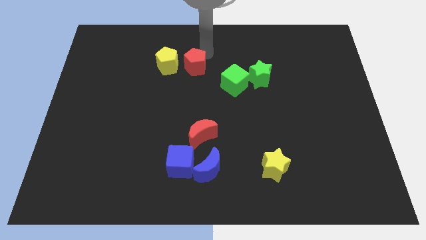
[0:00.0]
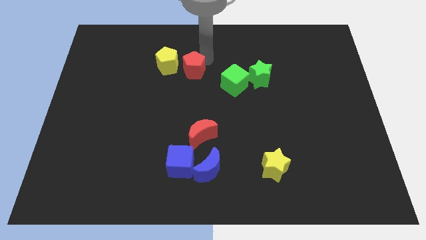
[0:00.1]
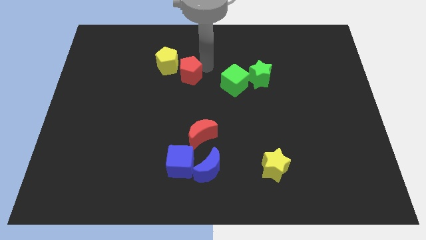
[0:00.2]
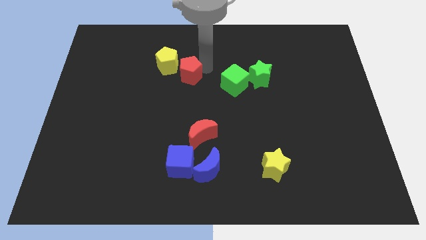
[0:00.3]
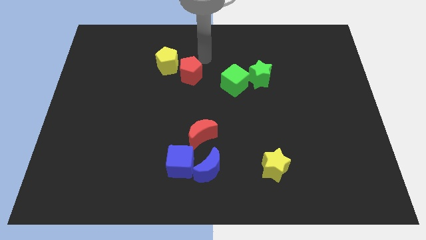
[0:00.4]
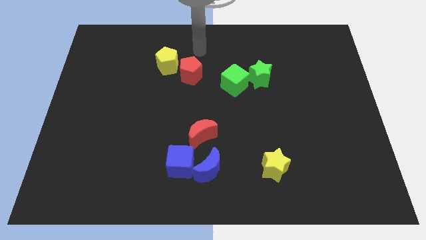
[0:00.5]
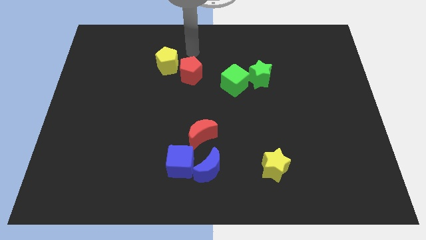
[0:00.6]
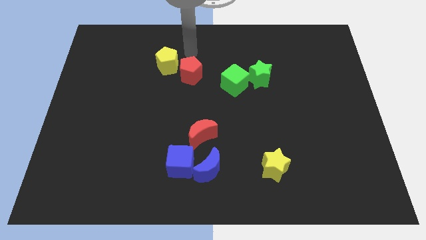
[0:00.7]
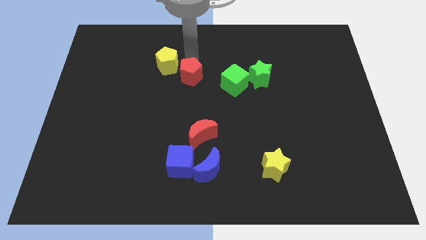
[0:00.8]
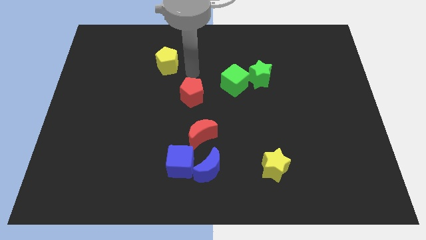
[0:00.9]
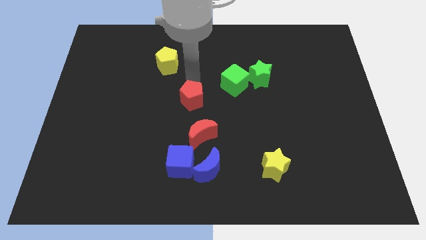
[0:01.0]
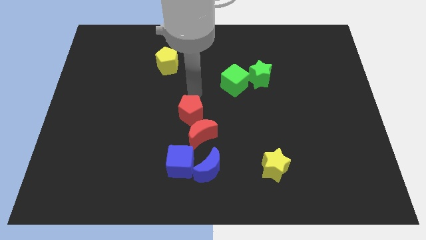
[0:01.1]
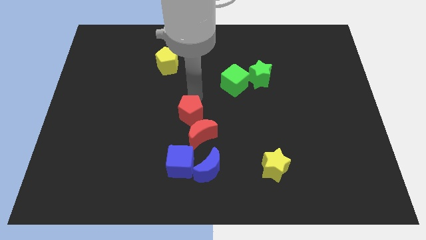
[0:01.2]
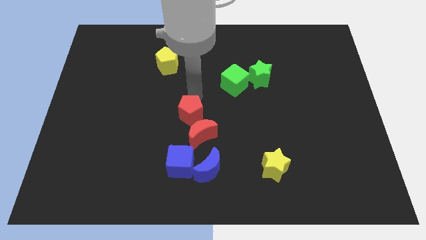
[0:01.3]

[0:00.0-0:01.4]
move the red pentagon diagonally bottom right to the yellow pentagon

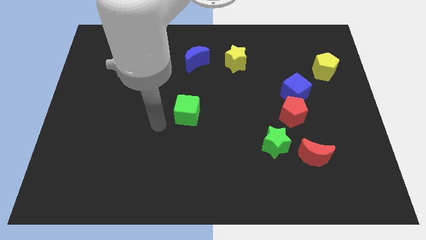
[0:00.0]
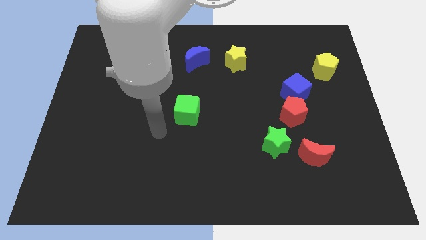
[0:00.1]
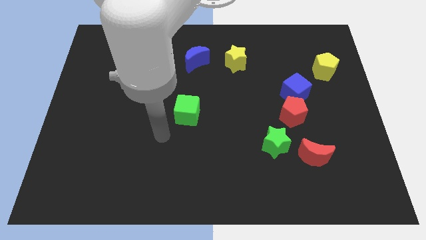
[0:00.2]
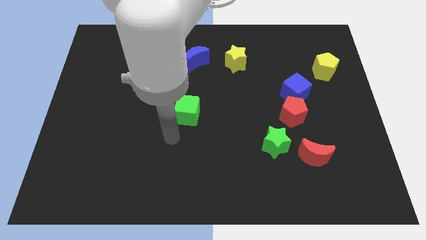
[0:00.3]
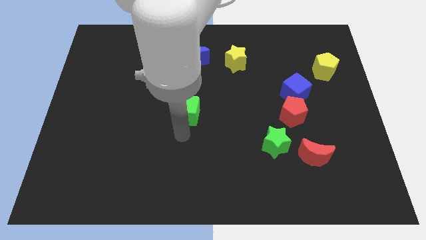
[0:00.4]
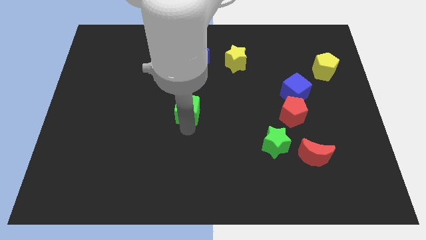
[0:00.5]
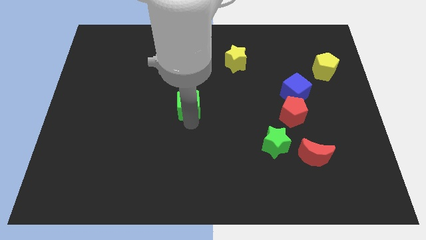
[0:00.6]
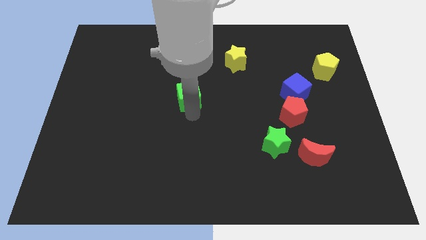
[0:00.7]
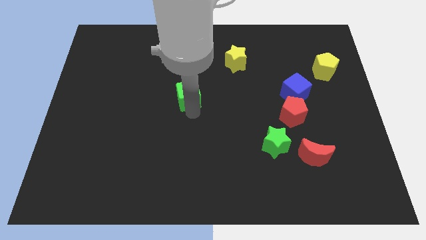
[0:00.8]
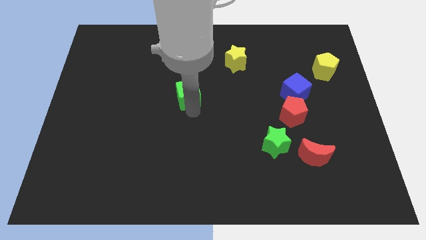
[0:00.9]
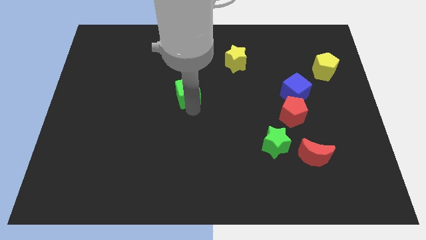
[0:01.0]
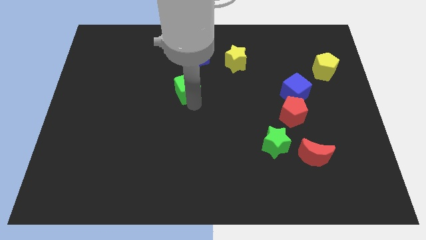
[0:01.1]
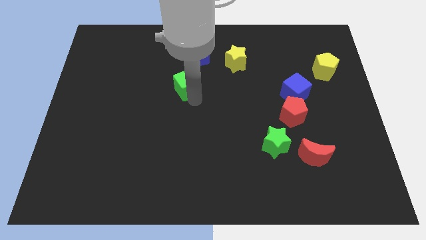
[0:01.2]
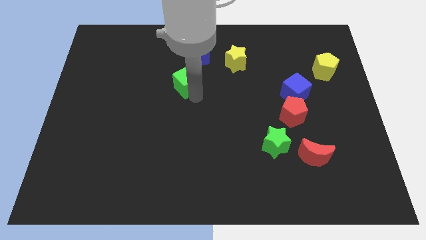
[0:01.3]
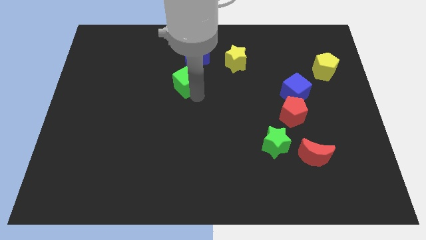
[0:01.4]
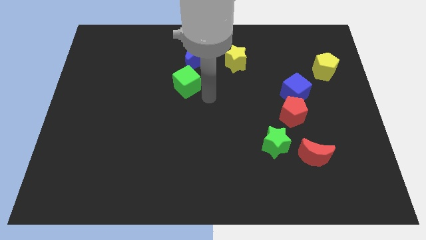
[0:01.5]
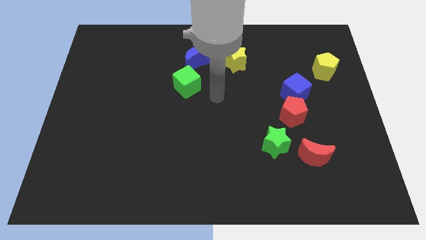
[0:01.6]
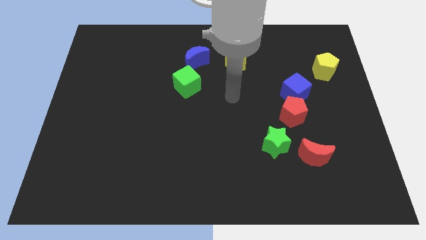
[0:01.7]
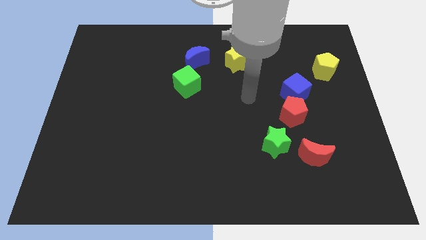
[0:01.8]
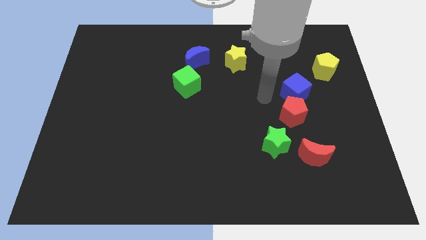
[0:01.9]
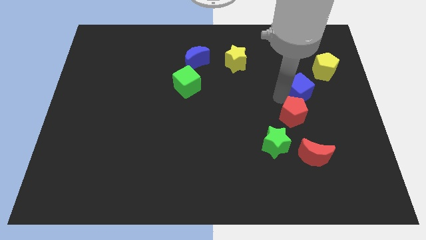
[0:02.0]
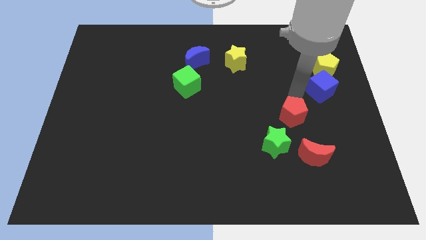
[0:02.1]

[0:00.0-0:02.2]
push the green cube to the blue moon

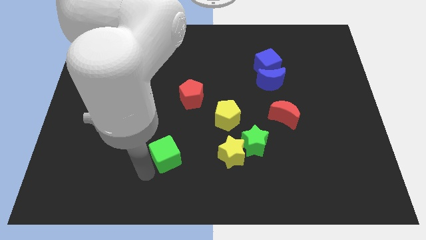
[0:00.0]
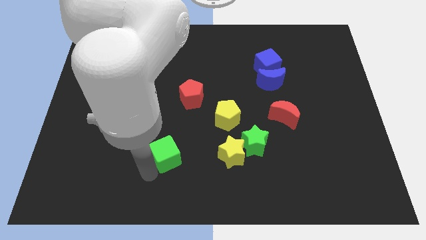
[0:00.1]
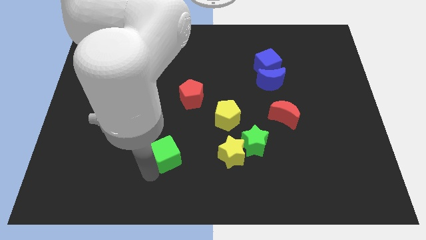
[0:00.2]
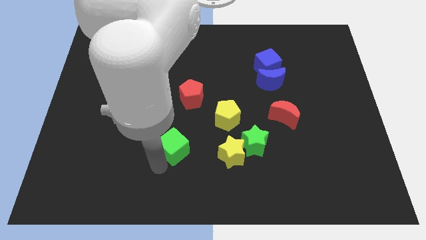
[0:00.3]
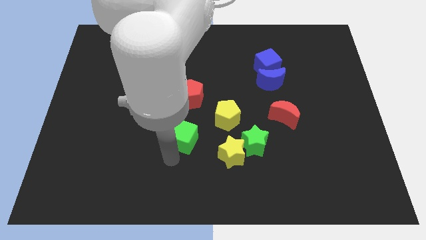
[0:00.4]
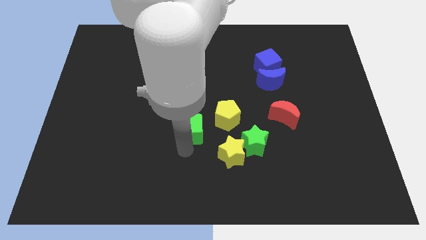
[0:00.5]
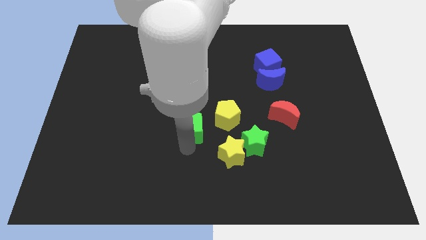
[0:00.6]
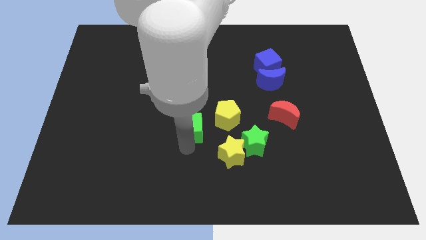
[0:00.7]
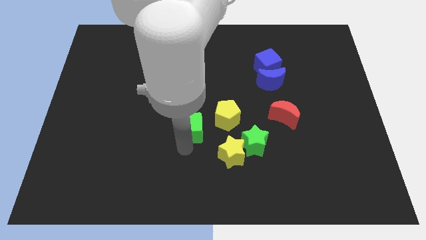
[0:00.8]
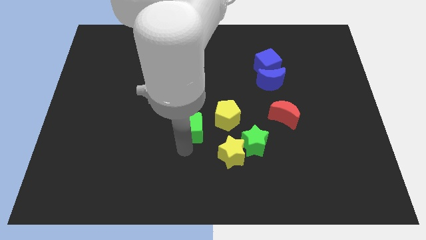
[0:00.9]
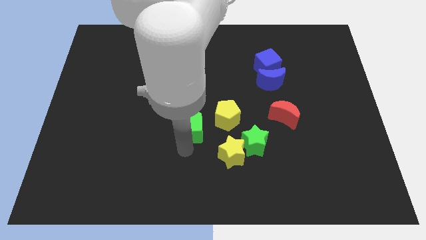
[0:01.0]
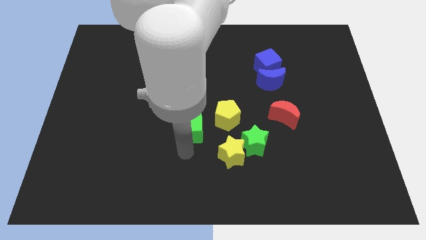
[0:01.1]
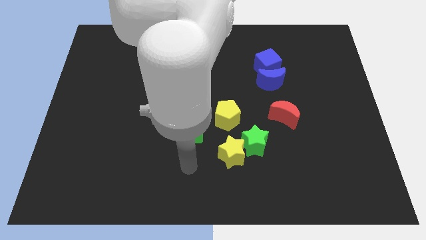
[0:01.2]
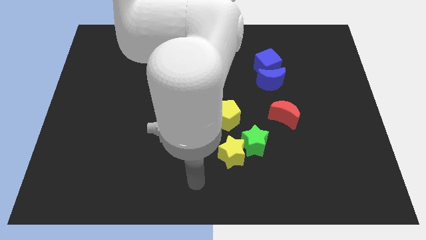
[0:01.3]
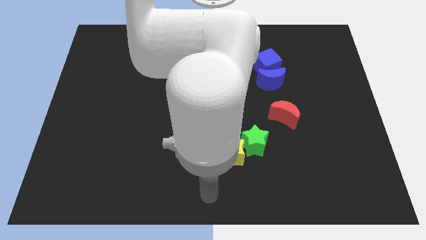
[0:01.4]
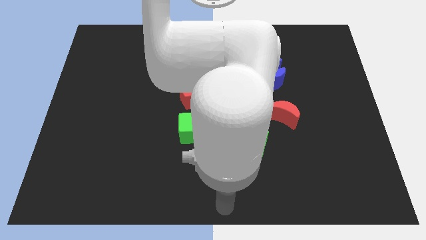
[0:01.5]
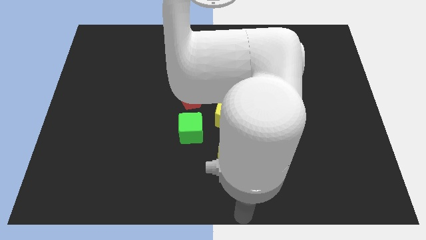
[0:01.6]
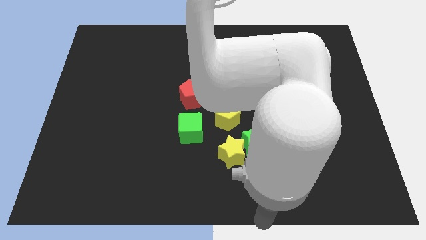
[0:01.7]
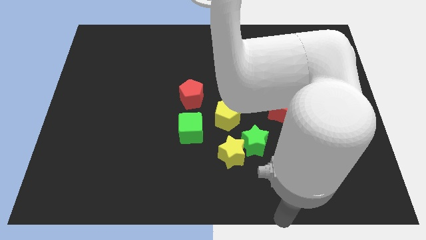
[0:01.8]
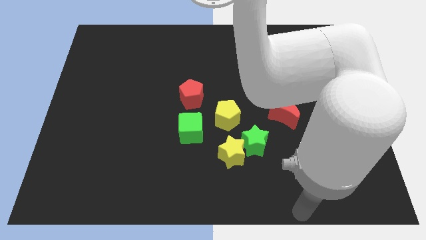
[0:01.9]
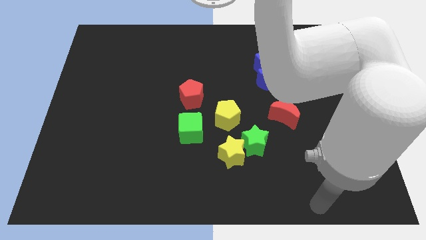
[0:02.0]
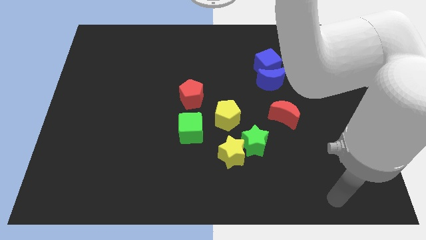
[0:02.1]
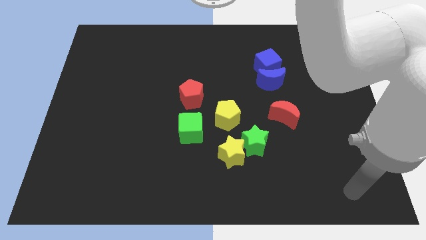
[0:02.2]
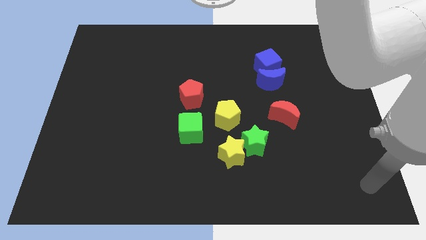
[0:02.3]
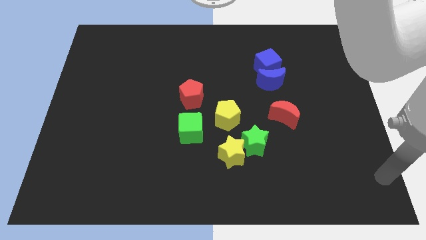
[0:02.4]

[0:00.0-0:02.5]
push green cube towards red pentagon

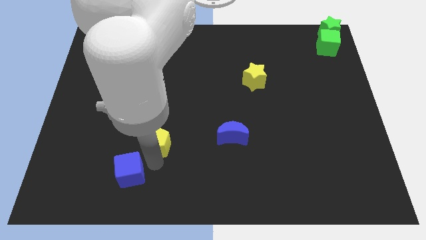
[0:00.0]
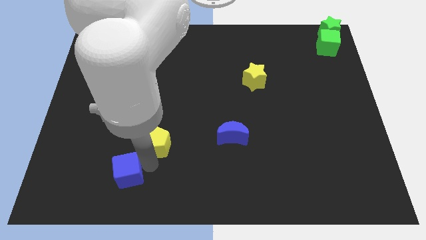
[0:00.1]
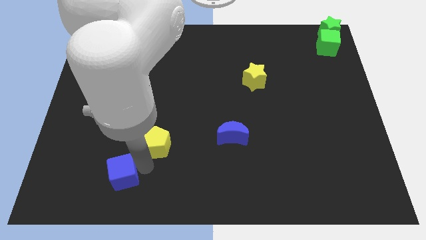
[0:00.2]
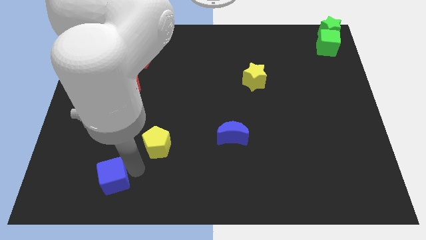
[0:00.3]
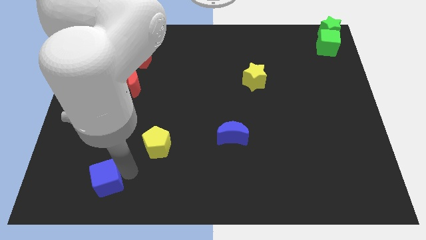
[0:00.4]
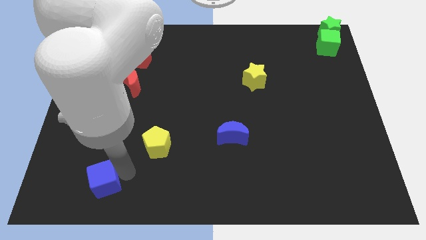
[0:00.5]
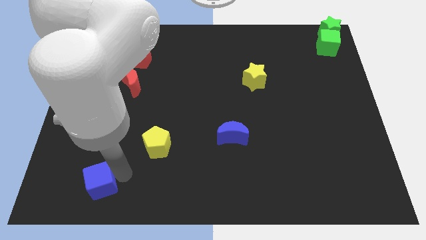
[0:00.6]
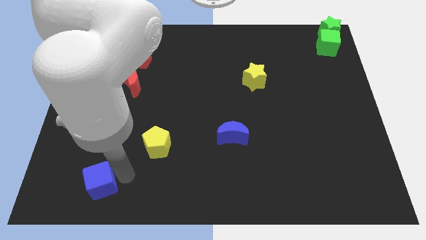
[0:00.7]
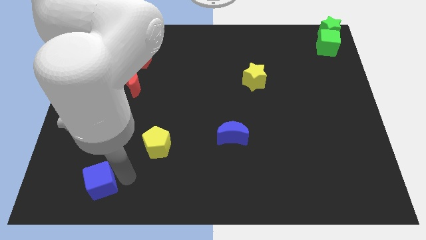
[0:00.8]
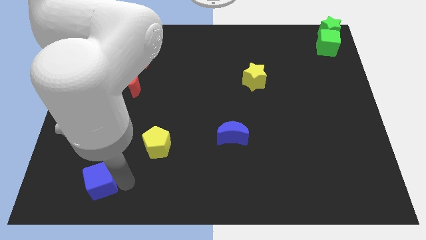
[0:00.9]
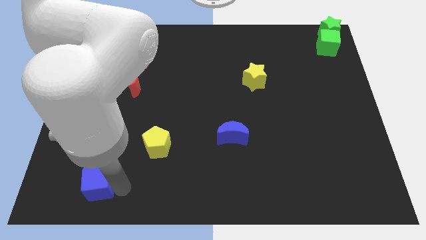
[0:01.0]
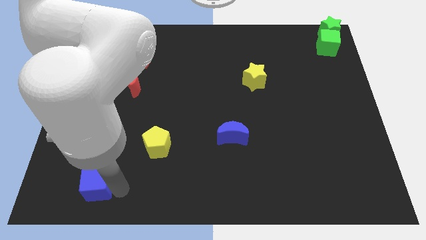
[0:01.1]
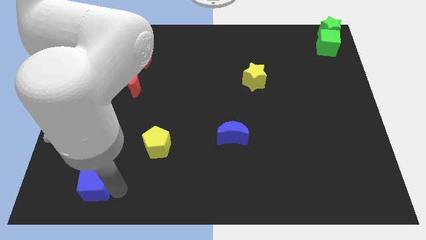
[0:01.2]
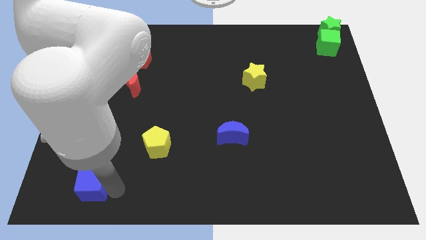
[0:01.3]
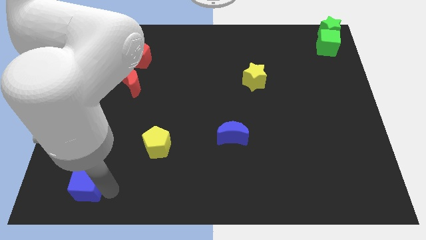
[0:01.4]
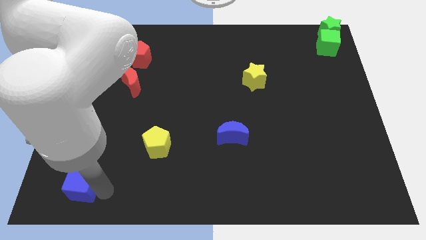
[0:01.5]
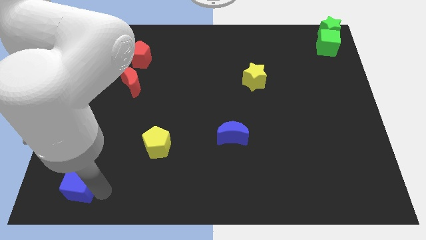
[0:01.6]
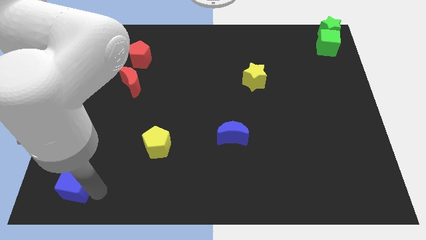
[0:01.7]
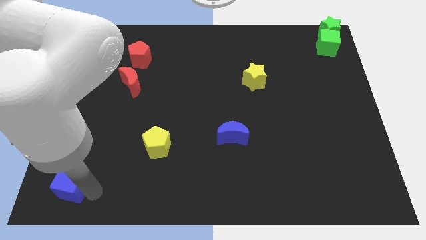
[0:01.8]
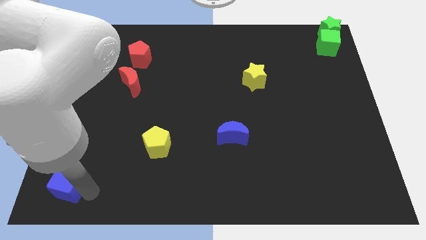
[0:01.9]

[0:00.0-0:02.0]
move the blue cube to the bottom left of the yellow pentagon

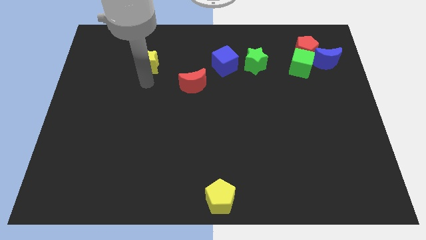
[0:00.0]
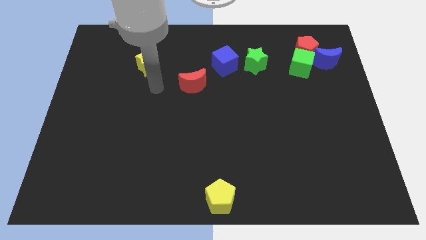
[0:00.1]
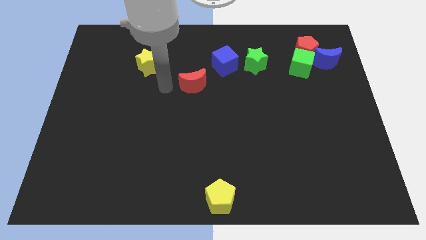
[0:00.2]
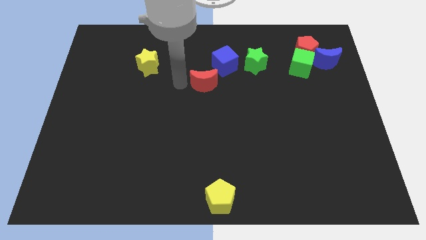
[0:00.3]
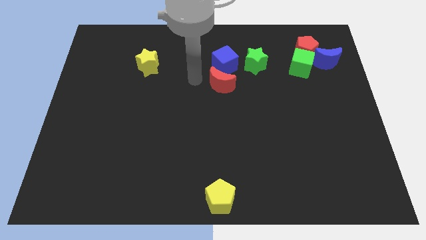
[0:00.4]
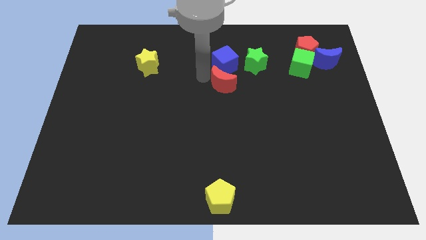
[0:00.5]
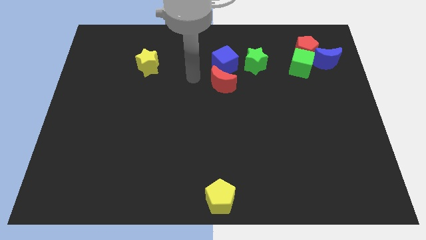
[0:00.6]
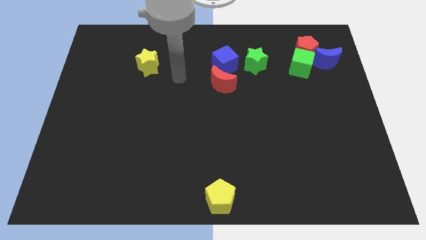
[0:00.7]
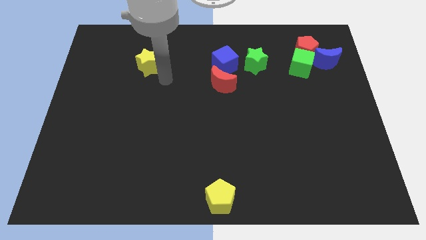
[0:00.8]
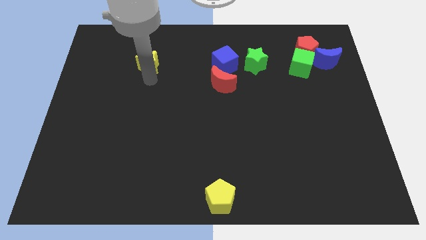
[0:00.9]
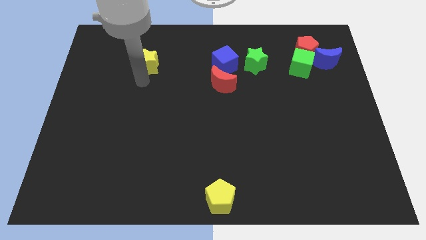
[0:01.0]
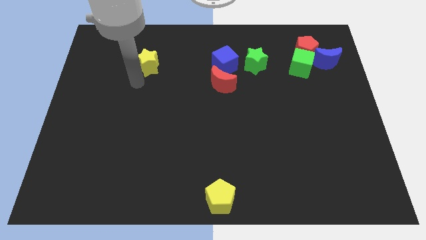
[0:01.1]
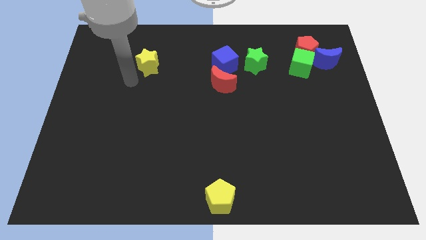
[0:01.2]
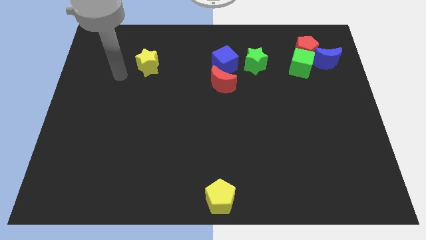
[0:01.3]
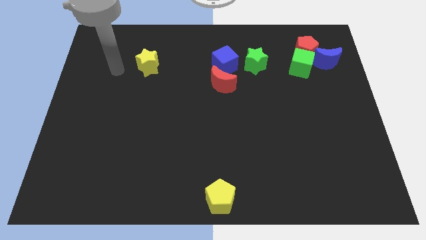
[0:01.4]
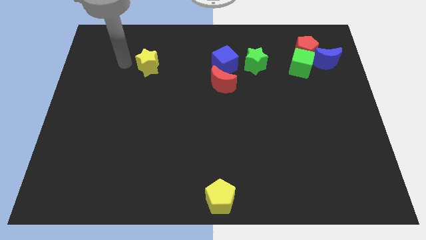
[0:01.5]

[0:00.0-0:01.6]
place red moon below the blue cube at the top center of the board
